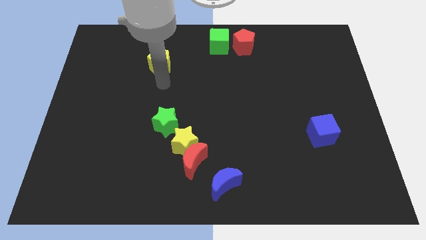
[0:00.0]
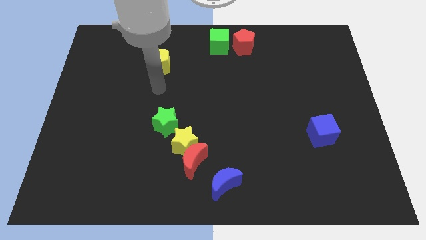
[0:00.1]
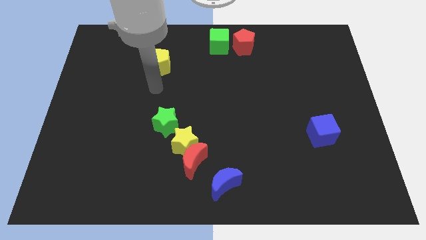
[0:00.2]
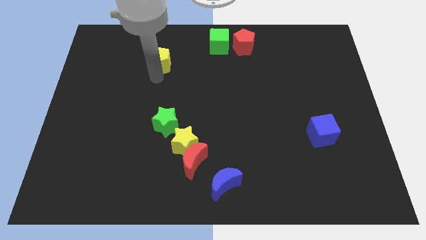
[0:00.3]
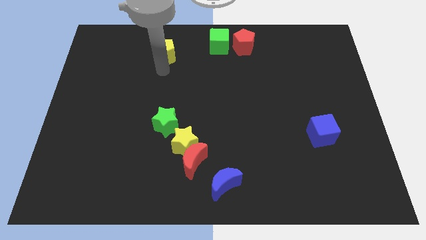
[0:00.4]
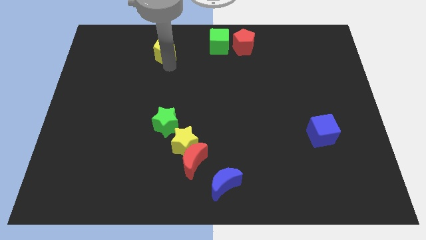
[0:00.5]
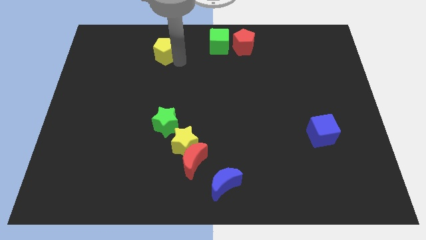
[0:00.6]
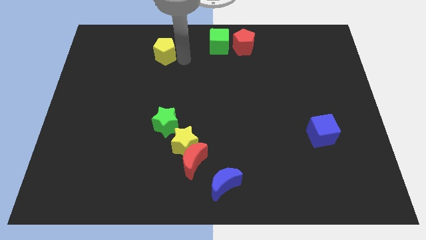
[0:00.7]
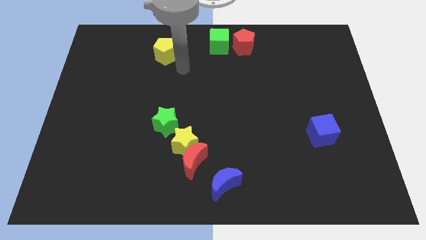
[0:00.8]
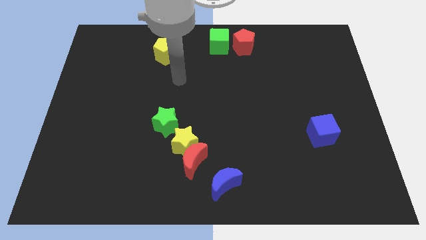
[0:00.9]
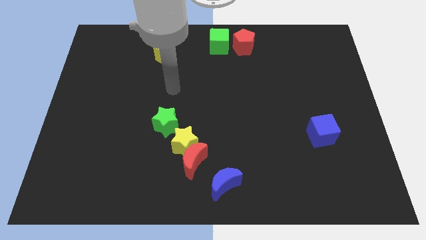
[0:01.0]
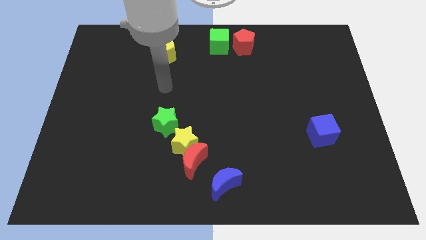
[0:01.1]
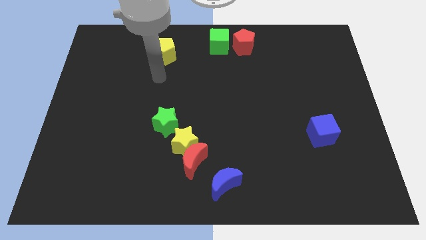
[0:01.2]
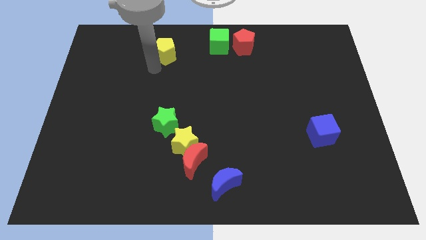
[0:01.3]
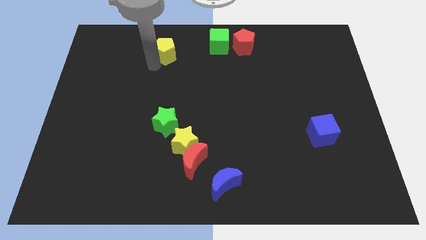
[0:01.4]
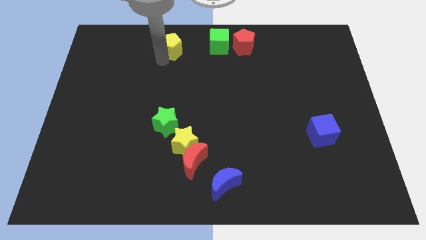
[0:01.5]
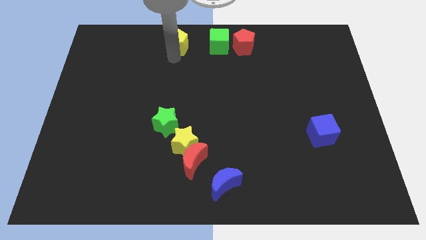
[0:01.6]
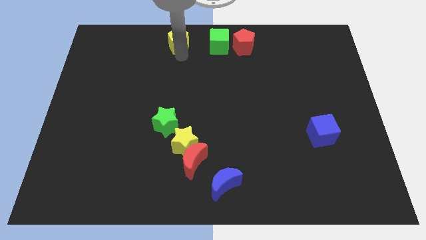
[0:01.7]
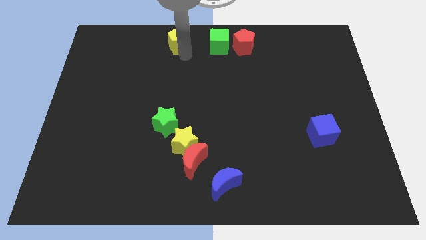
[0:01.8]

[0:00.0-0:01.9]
move the yellow pentagon to the left of the green cube

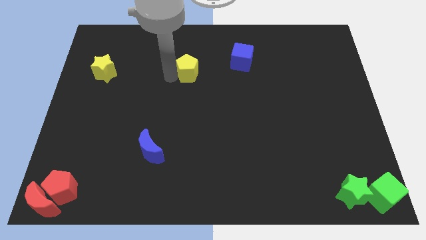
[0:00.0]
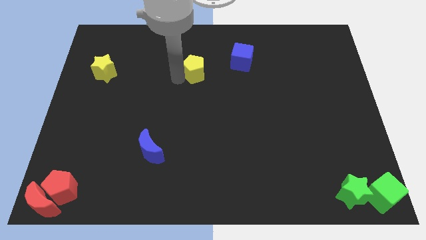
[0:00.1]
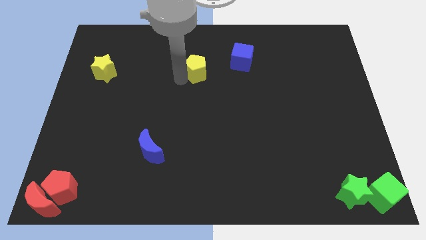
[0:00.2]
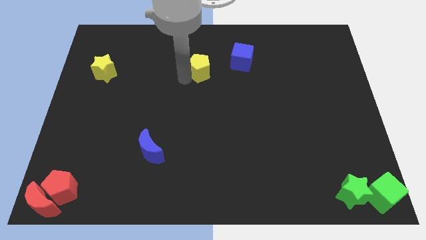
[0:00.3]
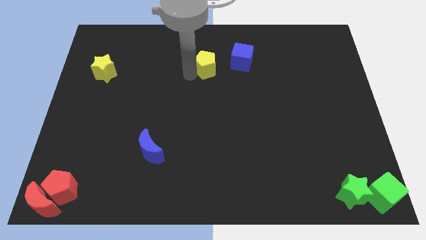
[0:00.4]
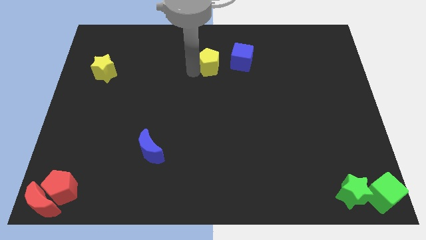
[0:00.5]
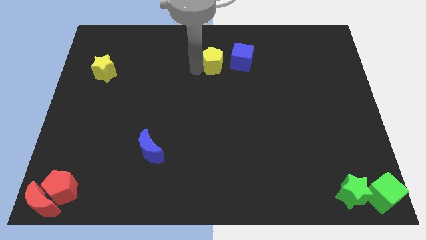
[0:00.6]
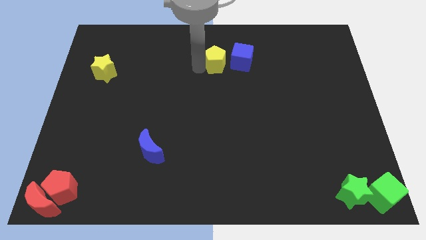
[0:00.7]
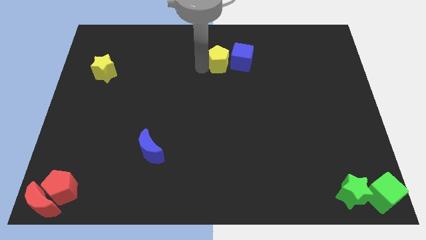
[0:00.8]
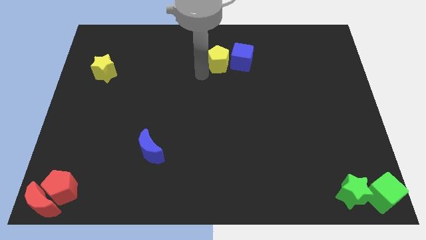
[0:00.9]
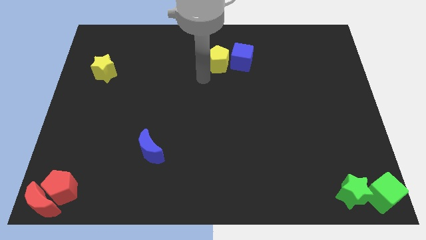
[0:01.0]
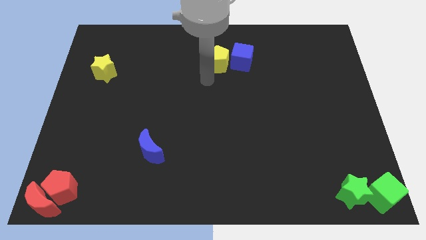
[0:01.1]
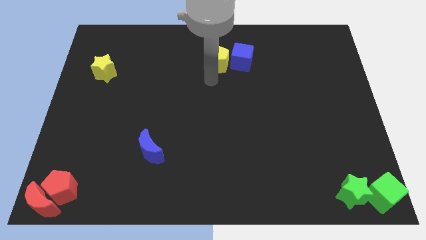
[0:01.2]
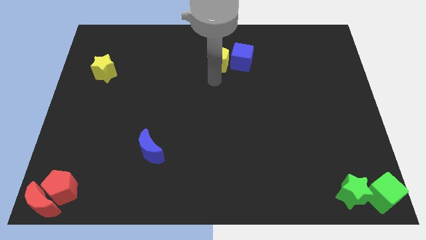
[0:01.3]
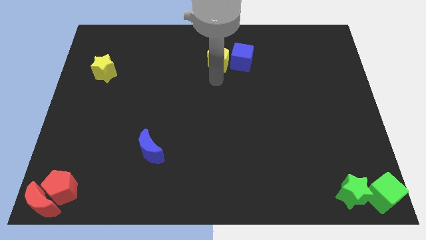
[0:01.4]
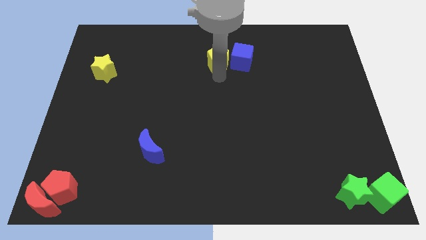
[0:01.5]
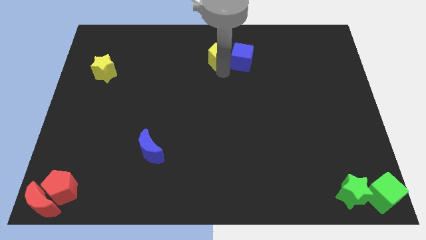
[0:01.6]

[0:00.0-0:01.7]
push the yellow pentagon to the left side of the blue moon

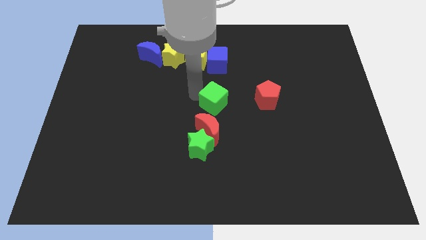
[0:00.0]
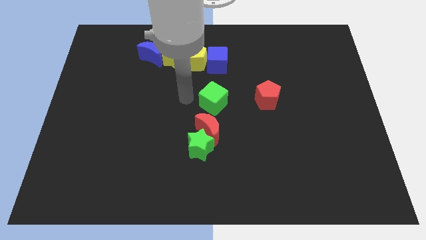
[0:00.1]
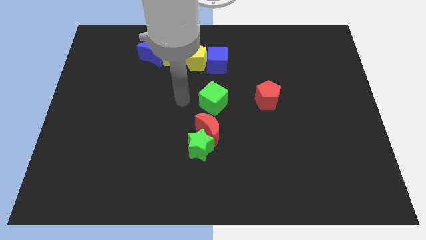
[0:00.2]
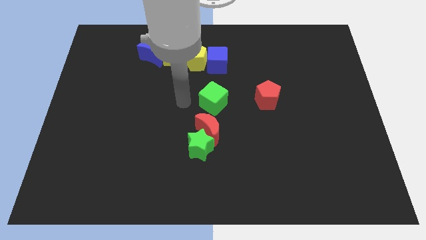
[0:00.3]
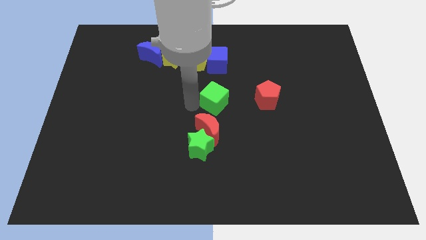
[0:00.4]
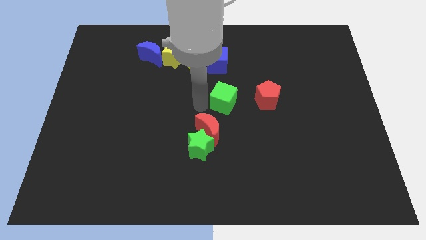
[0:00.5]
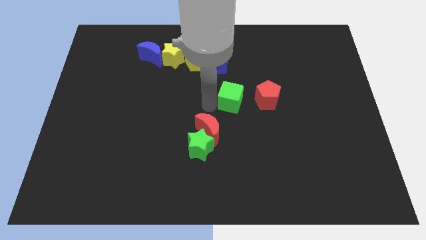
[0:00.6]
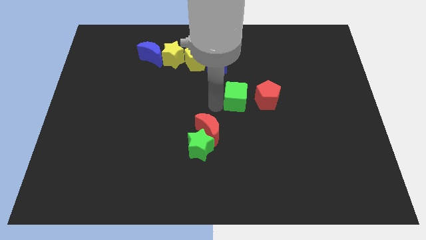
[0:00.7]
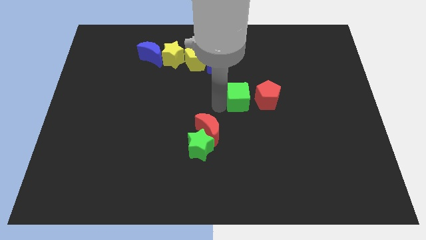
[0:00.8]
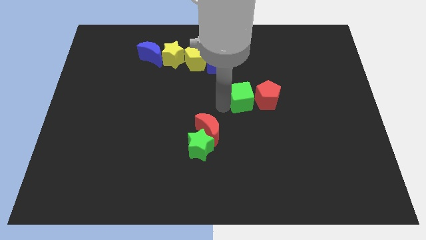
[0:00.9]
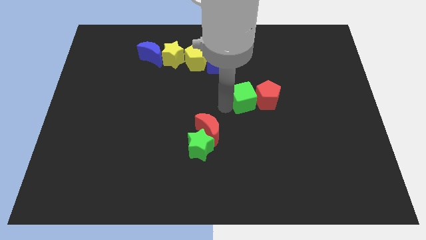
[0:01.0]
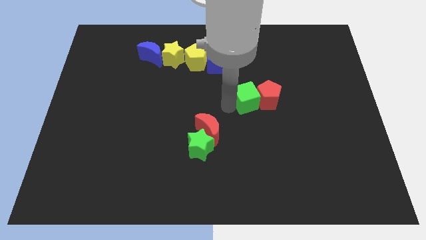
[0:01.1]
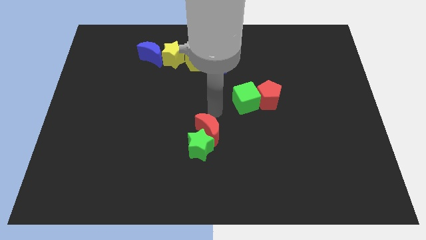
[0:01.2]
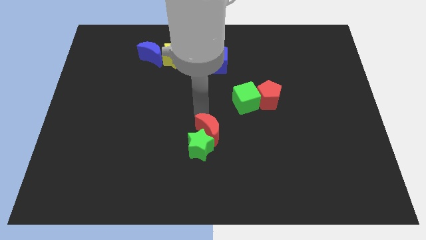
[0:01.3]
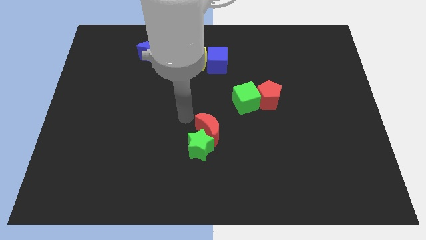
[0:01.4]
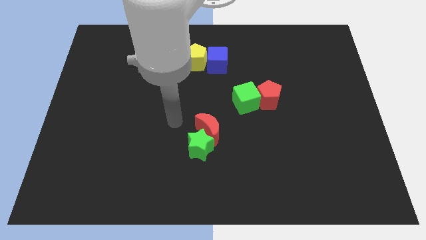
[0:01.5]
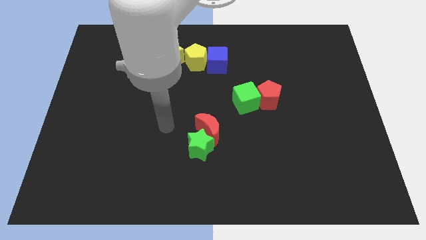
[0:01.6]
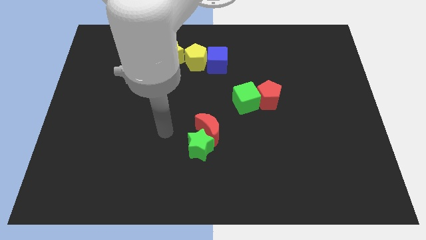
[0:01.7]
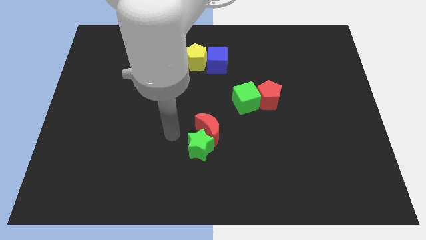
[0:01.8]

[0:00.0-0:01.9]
slide the green cube to the left side of the red pentagon

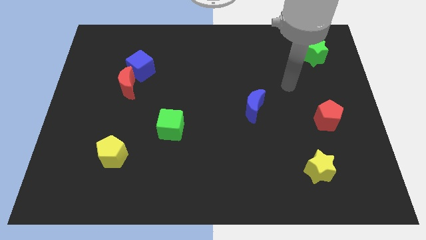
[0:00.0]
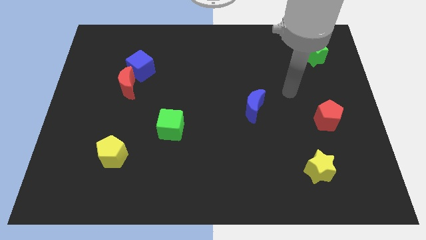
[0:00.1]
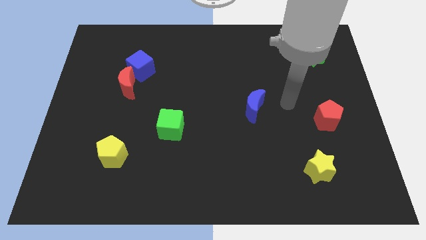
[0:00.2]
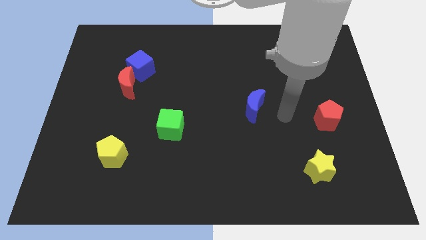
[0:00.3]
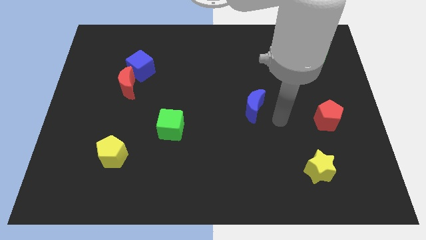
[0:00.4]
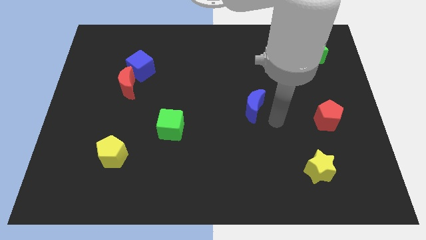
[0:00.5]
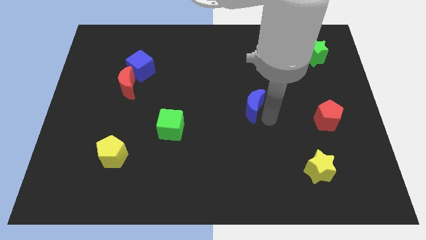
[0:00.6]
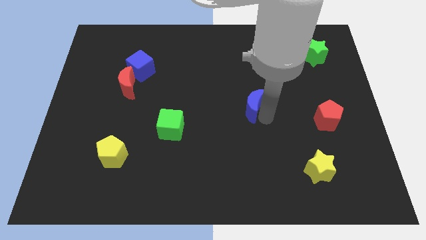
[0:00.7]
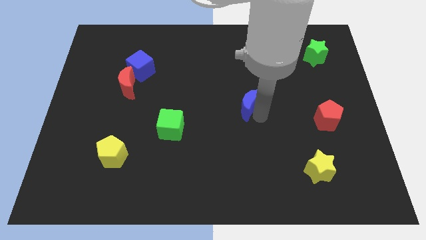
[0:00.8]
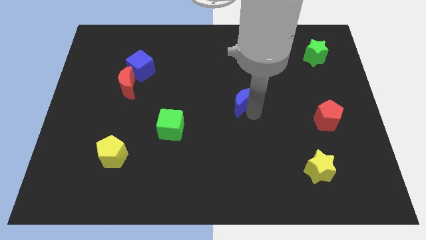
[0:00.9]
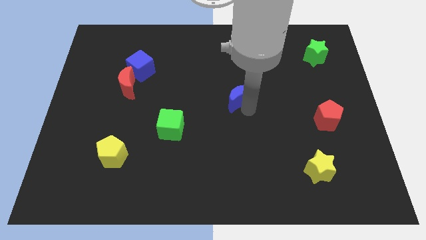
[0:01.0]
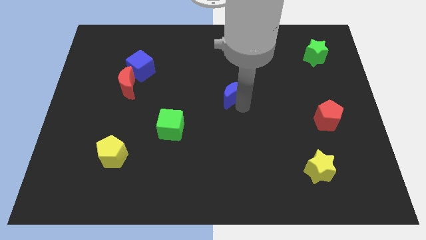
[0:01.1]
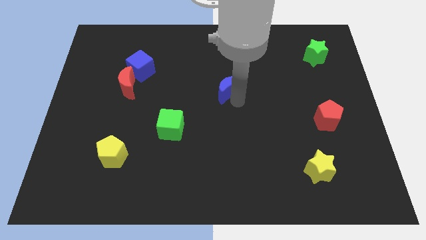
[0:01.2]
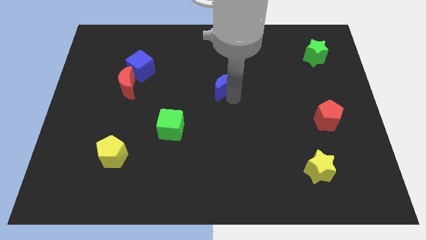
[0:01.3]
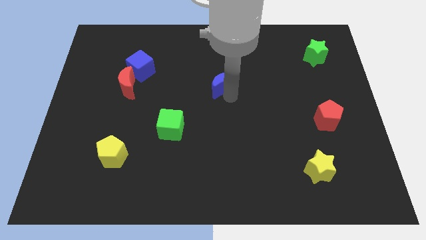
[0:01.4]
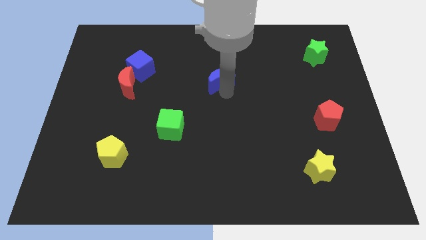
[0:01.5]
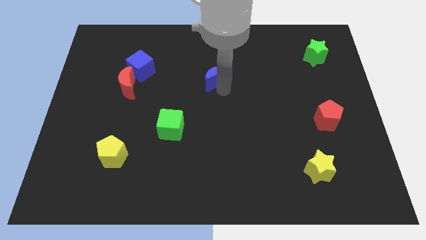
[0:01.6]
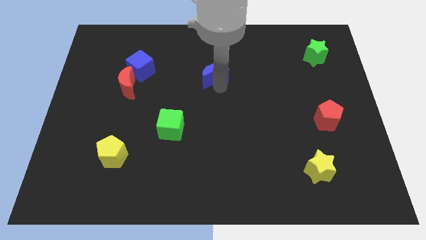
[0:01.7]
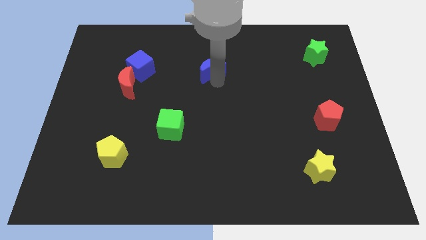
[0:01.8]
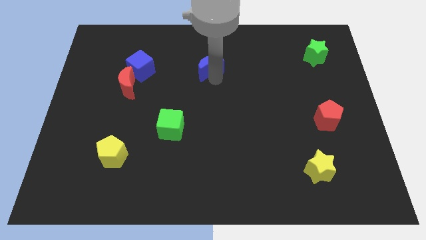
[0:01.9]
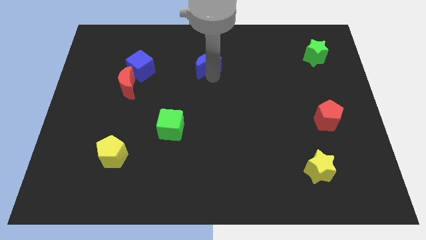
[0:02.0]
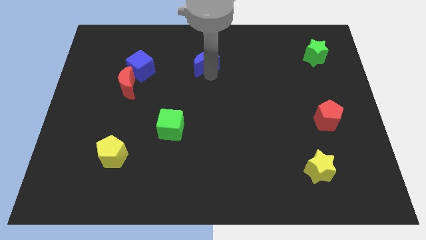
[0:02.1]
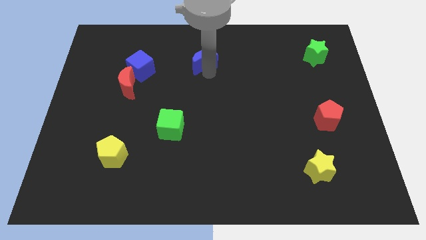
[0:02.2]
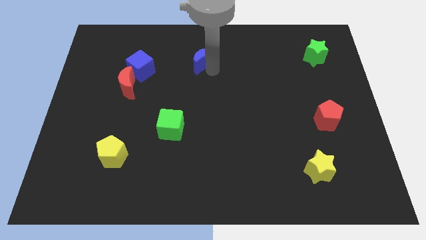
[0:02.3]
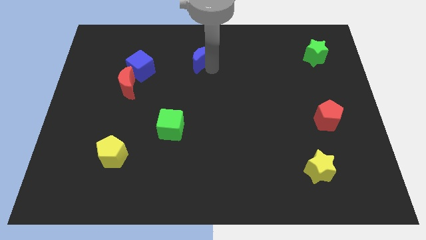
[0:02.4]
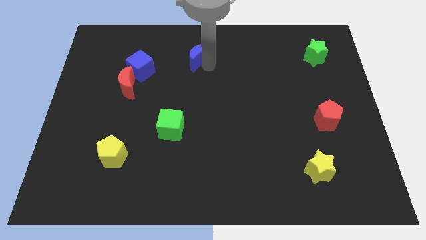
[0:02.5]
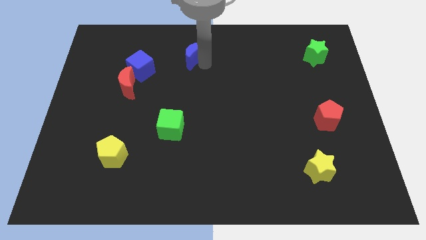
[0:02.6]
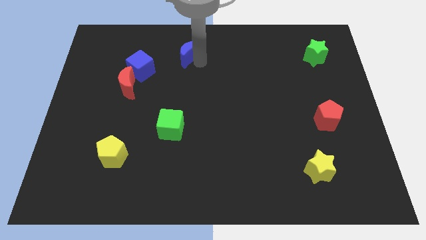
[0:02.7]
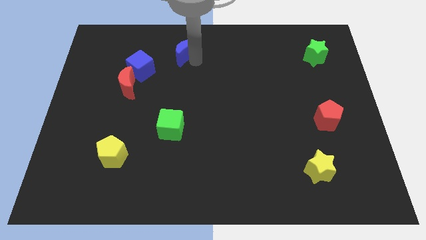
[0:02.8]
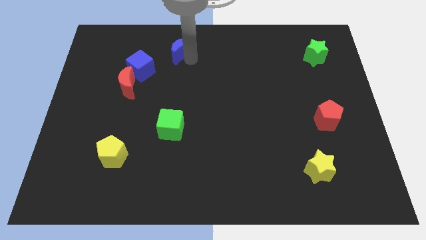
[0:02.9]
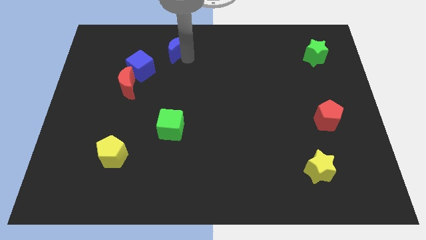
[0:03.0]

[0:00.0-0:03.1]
put the blue crescent above the green cube

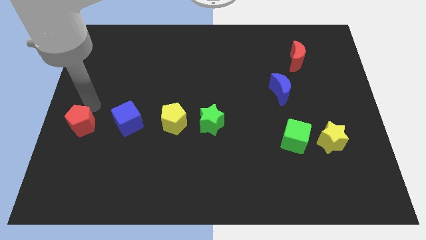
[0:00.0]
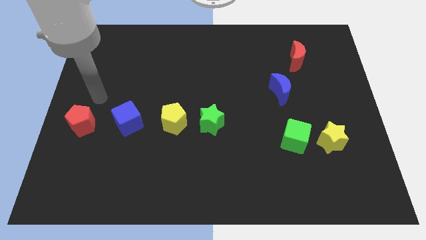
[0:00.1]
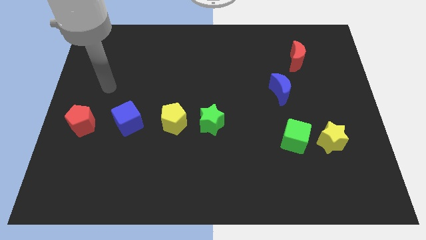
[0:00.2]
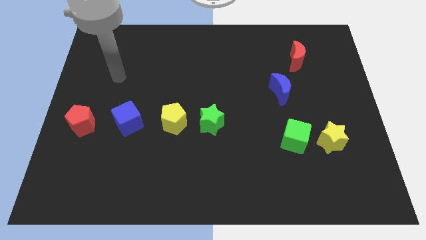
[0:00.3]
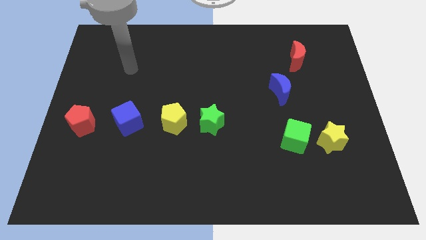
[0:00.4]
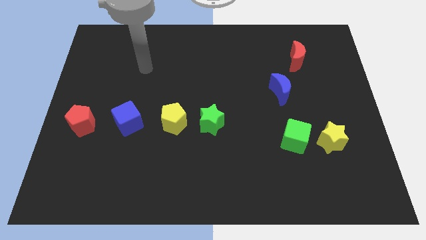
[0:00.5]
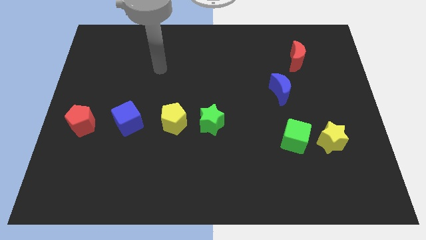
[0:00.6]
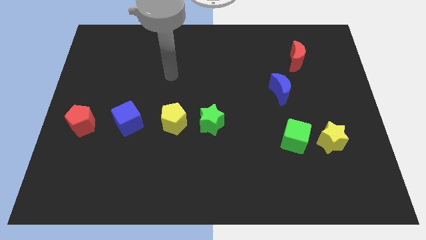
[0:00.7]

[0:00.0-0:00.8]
point your arm at the top side of the yellow pentagon
